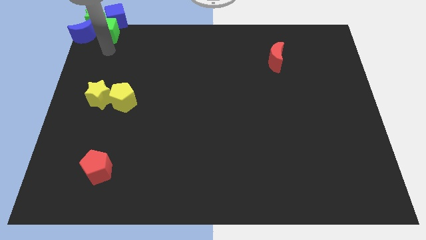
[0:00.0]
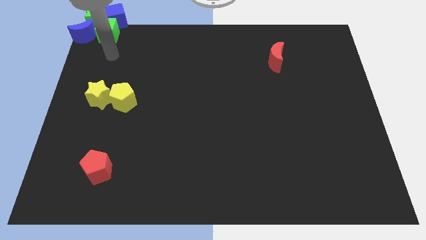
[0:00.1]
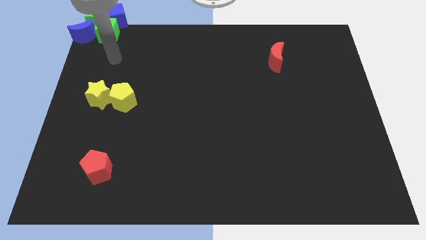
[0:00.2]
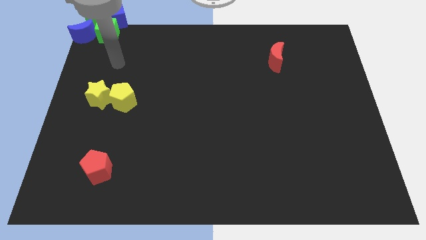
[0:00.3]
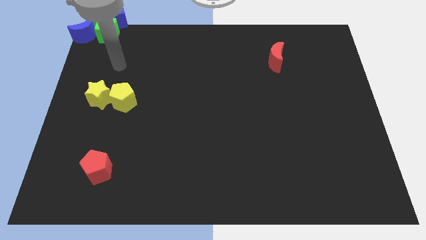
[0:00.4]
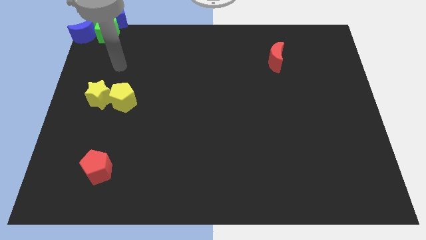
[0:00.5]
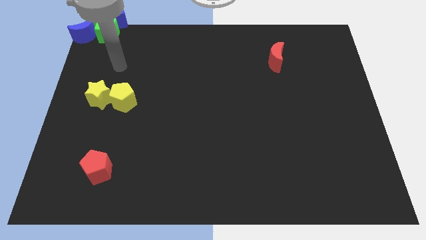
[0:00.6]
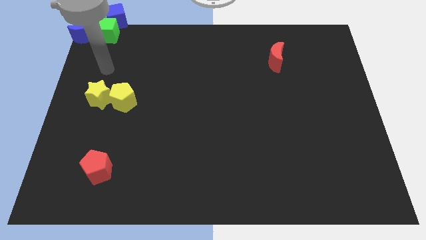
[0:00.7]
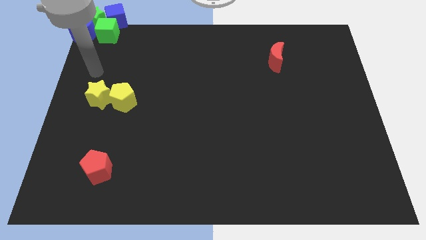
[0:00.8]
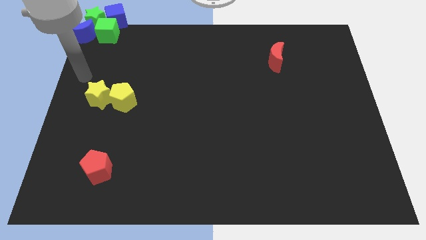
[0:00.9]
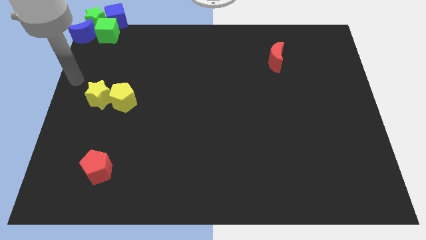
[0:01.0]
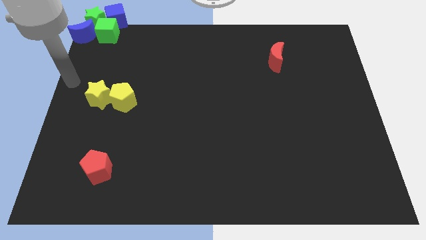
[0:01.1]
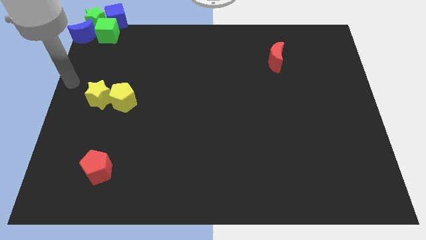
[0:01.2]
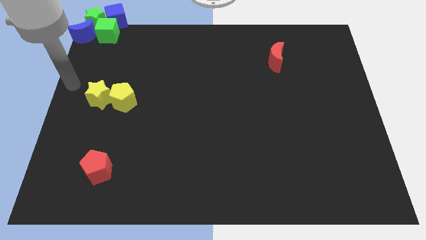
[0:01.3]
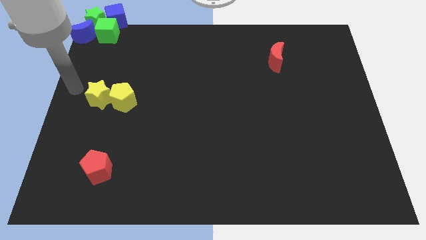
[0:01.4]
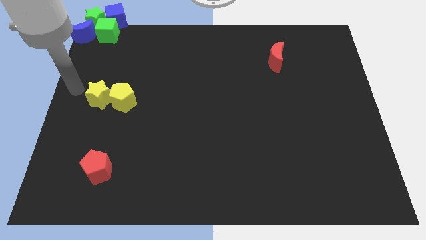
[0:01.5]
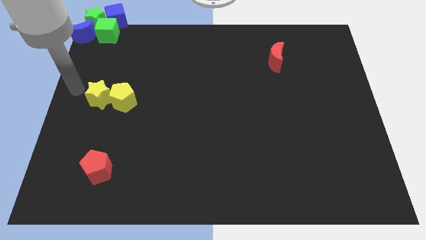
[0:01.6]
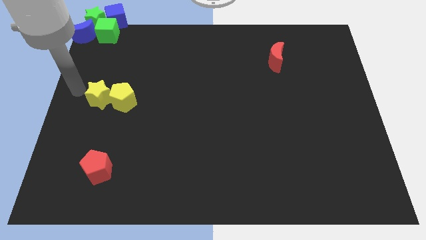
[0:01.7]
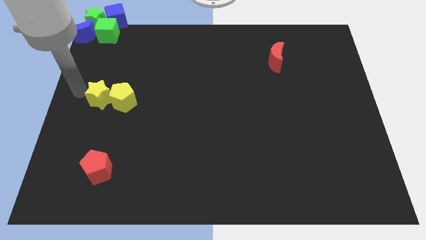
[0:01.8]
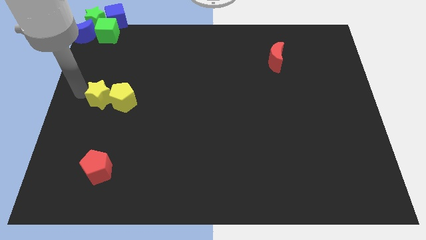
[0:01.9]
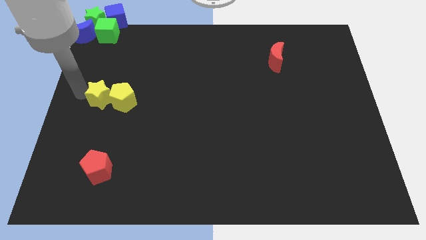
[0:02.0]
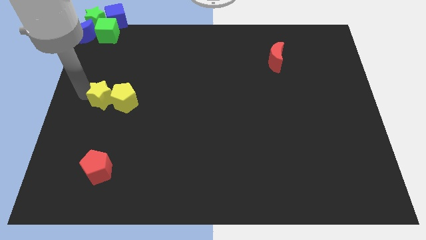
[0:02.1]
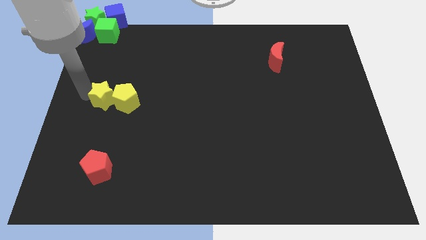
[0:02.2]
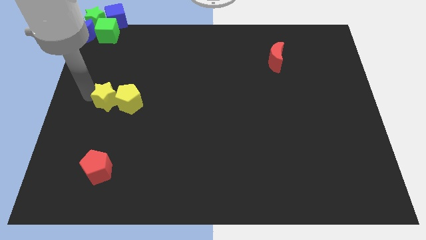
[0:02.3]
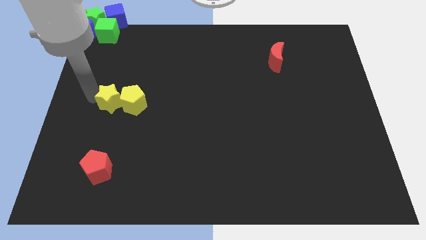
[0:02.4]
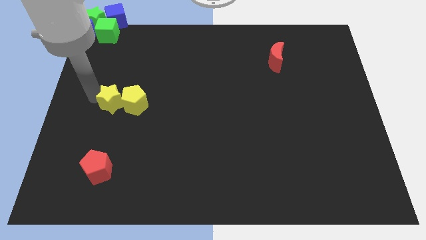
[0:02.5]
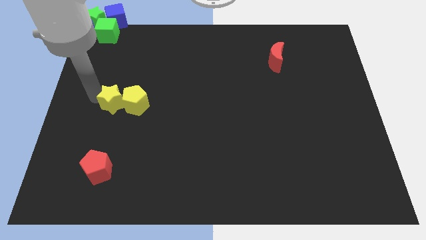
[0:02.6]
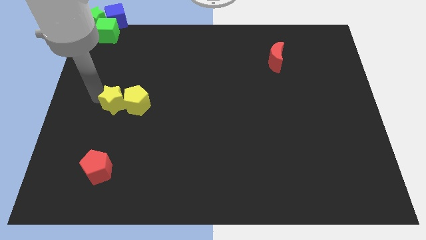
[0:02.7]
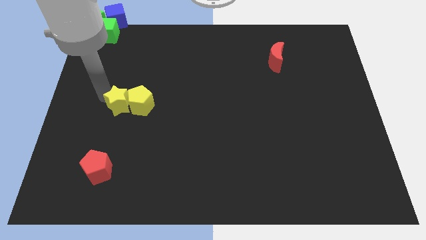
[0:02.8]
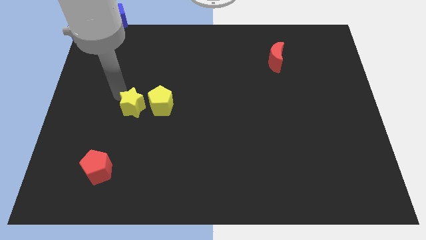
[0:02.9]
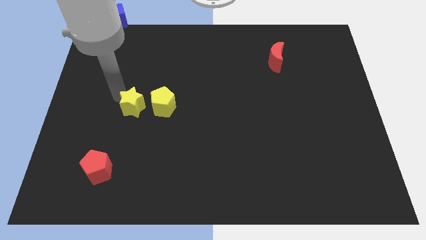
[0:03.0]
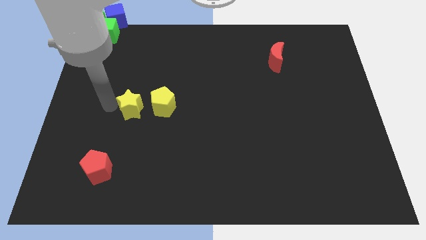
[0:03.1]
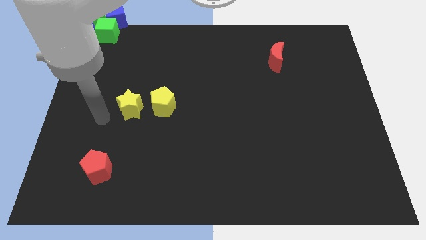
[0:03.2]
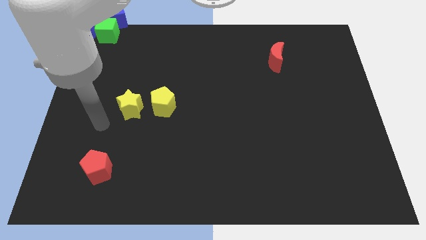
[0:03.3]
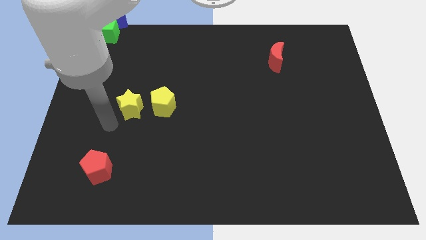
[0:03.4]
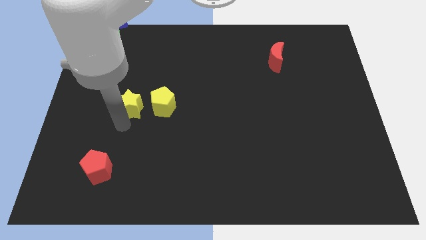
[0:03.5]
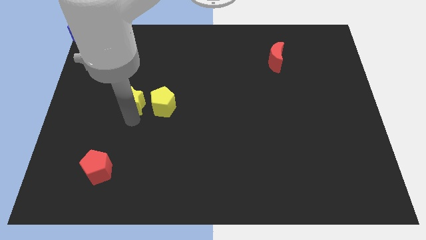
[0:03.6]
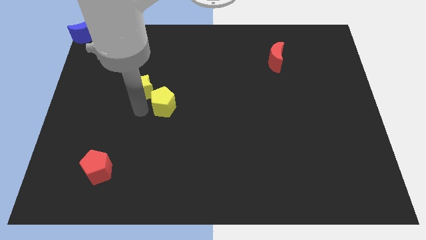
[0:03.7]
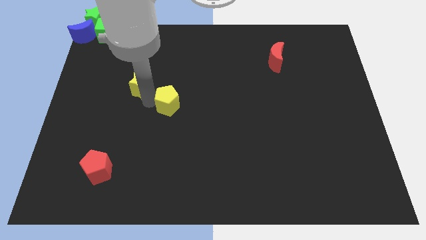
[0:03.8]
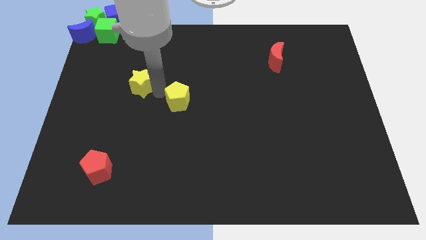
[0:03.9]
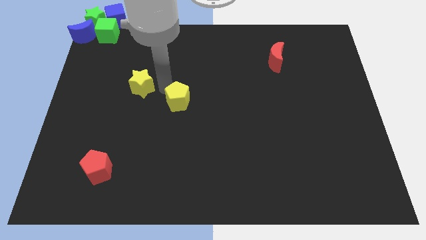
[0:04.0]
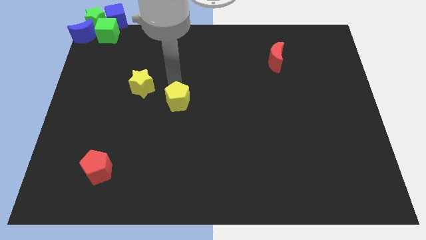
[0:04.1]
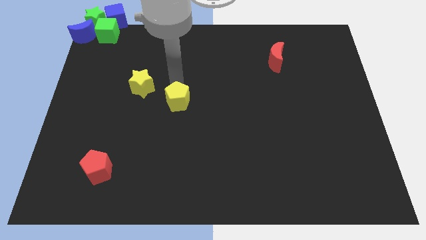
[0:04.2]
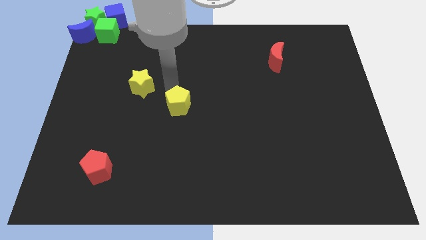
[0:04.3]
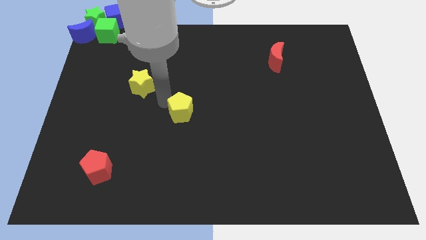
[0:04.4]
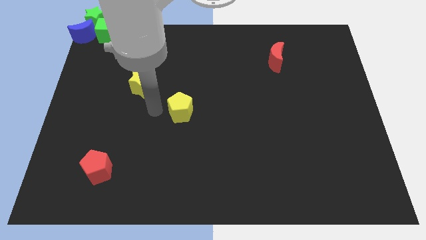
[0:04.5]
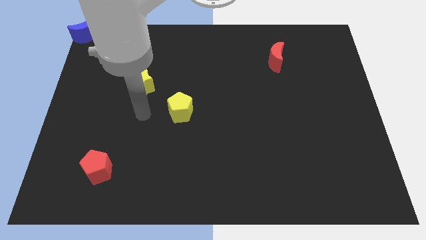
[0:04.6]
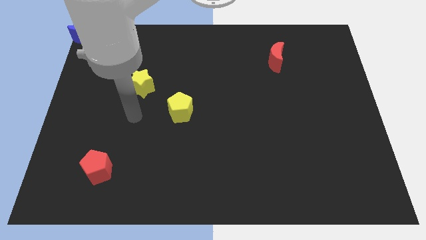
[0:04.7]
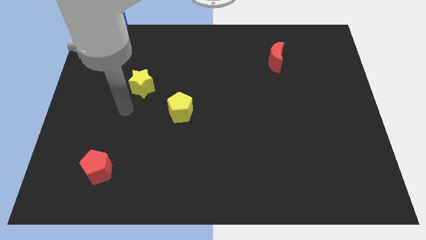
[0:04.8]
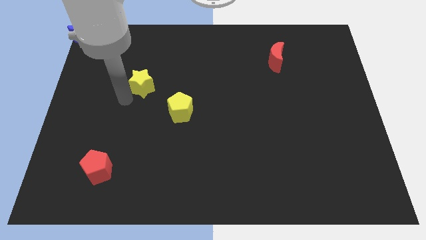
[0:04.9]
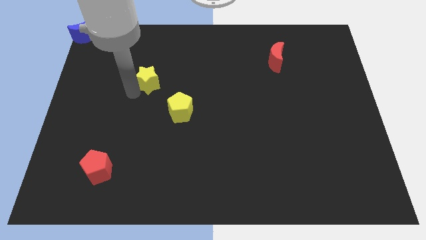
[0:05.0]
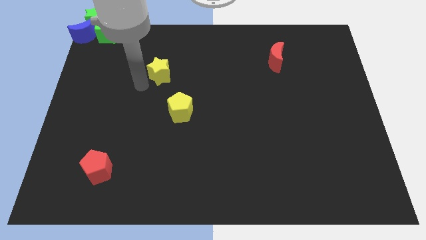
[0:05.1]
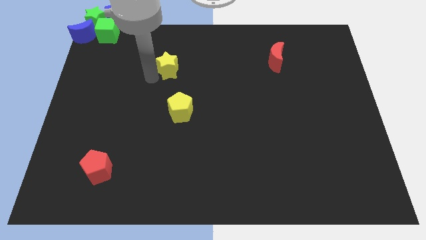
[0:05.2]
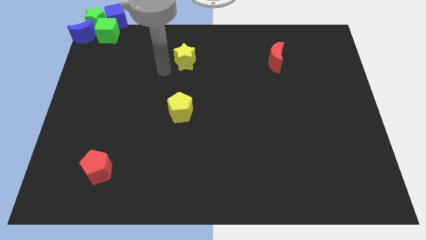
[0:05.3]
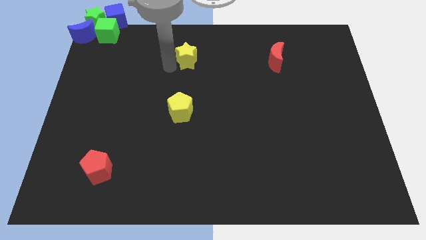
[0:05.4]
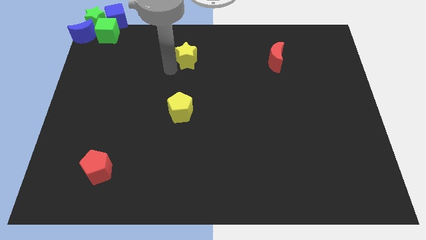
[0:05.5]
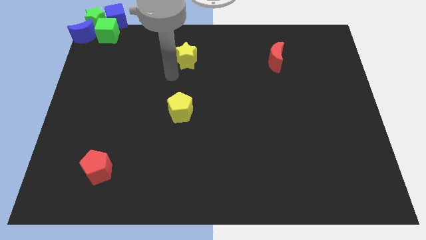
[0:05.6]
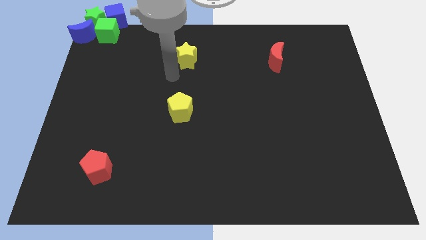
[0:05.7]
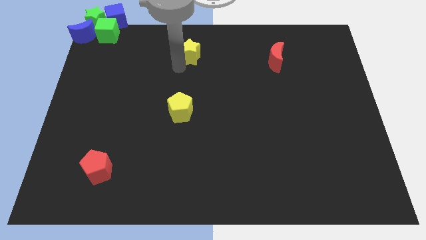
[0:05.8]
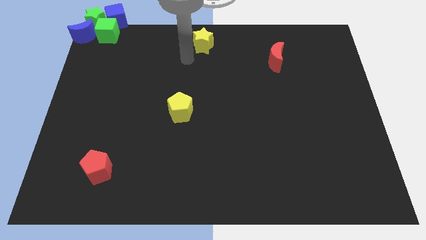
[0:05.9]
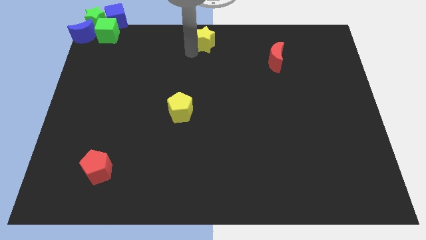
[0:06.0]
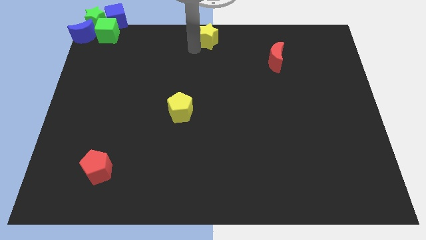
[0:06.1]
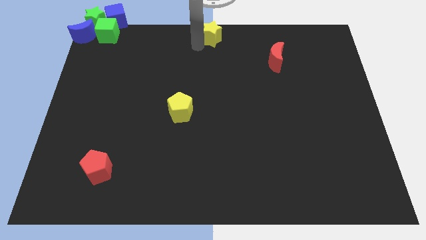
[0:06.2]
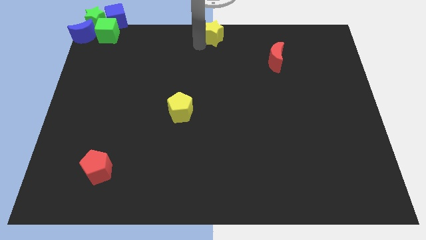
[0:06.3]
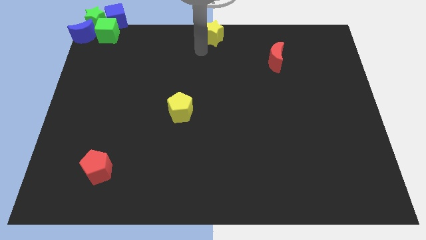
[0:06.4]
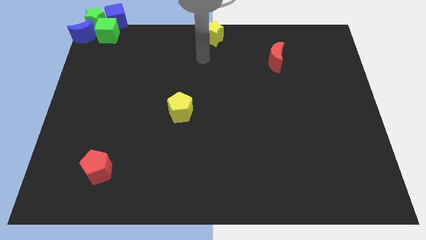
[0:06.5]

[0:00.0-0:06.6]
move the yellow star to the top center of the board

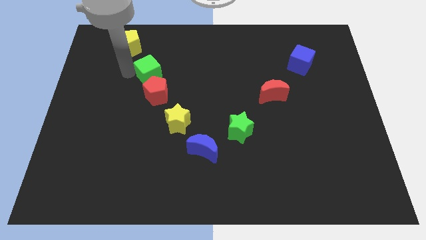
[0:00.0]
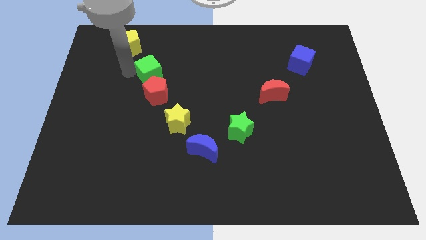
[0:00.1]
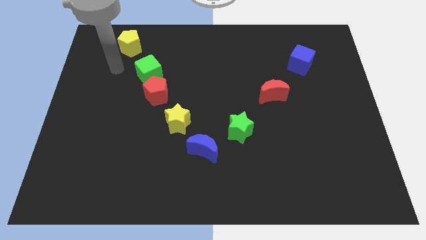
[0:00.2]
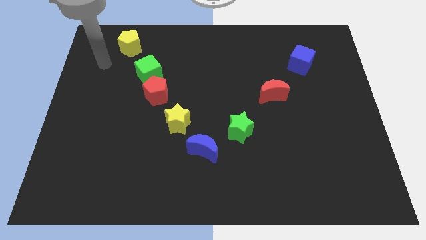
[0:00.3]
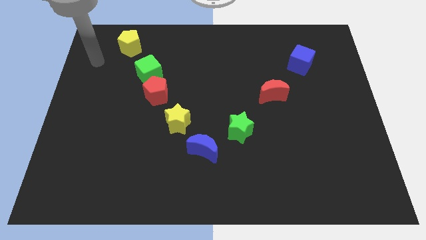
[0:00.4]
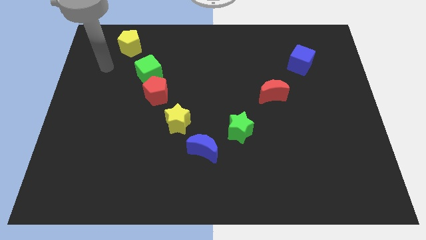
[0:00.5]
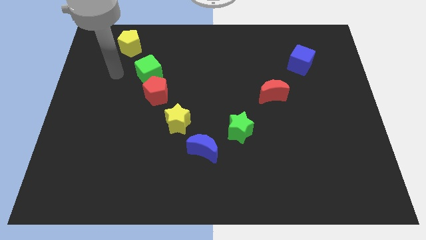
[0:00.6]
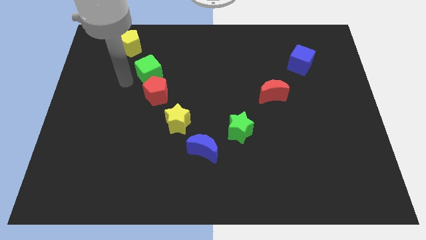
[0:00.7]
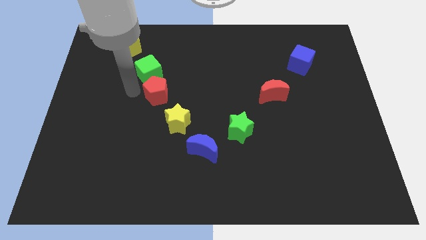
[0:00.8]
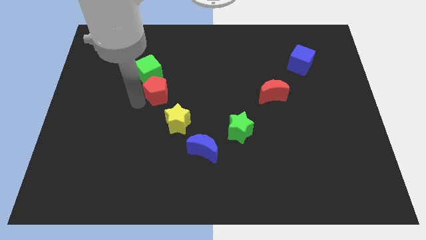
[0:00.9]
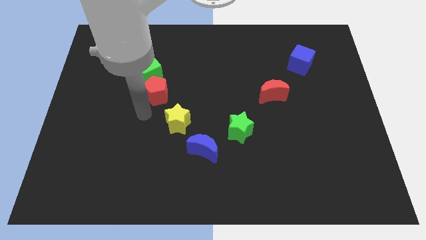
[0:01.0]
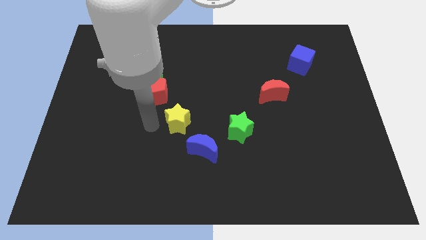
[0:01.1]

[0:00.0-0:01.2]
tap green cube slightly

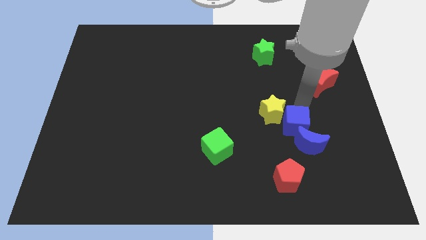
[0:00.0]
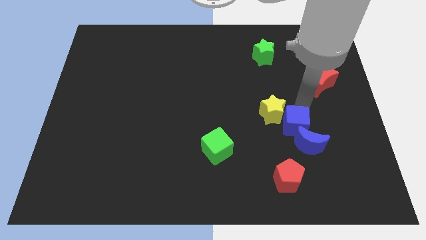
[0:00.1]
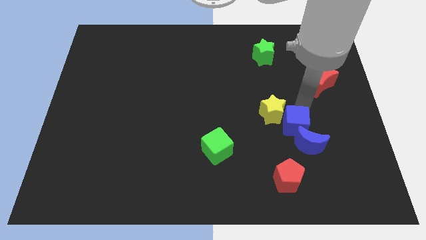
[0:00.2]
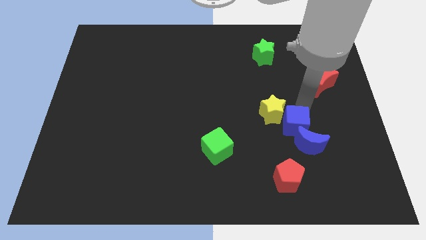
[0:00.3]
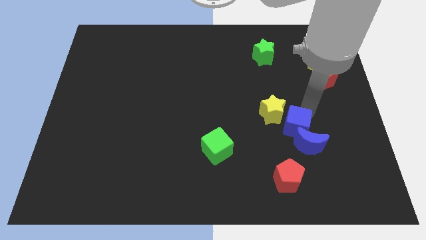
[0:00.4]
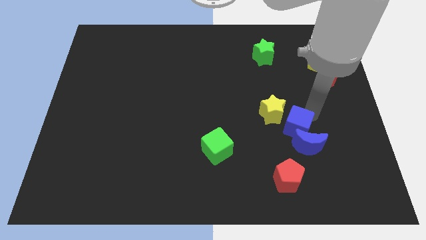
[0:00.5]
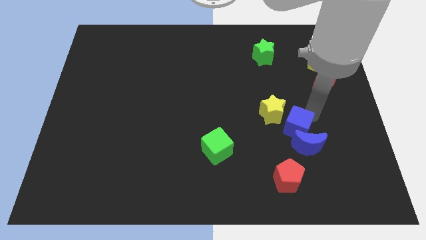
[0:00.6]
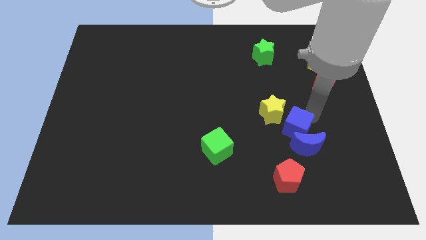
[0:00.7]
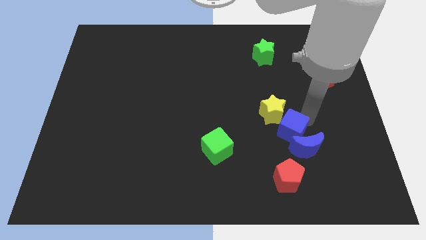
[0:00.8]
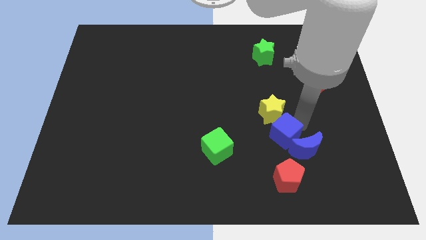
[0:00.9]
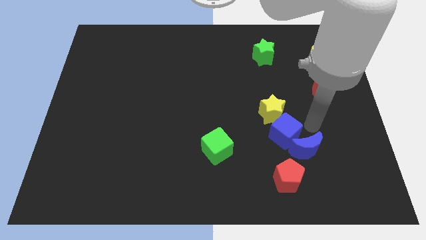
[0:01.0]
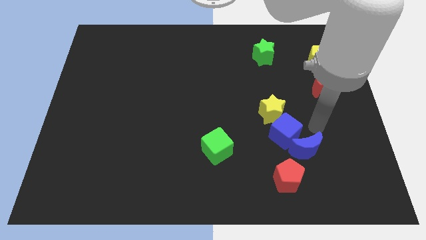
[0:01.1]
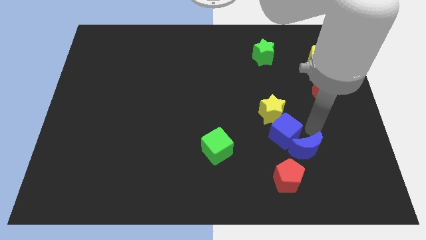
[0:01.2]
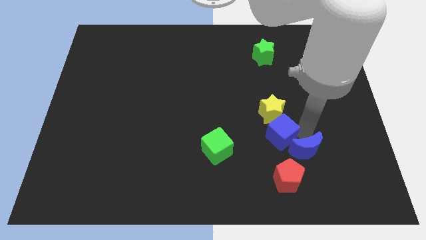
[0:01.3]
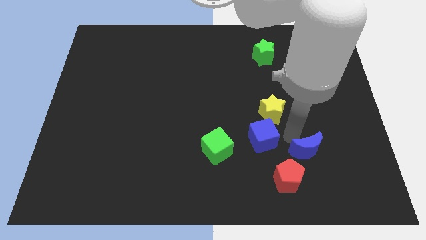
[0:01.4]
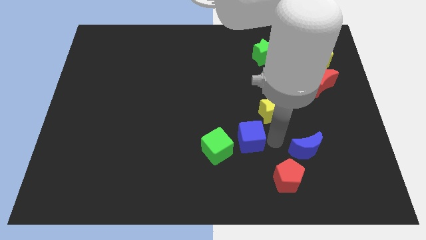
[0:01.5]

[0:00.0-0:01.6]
push the blue cube into the blue moon
